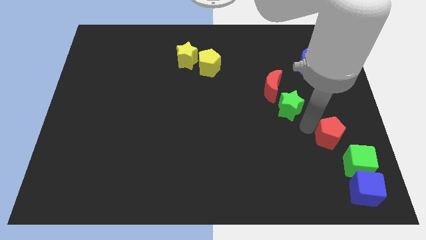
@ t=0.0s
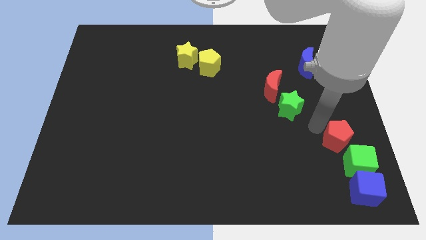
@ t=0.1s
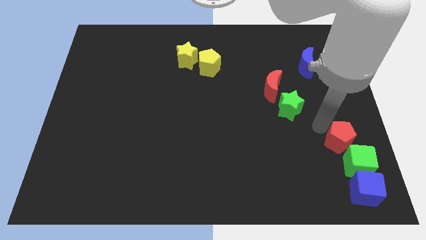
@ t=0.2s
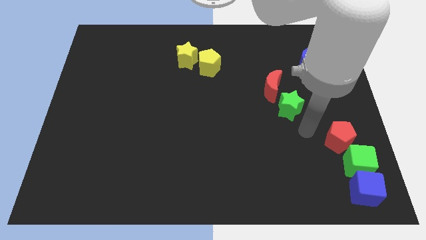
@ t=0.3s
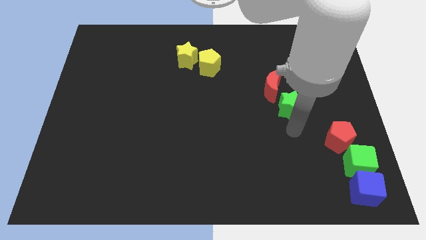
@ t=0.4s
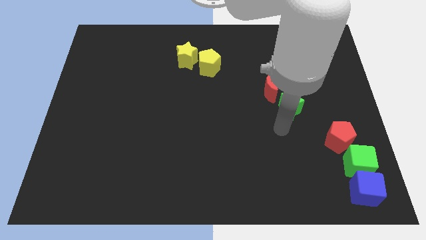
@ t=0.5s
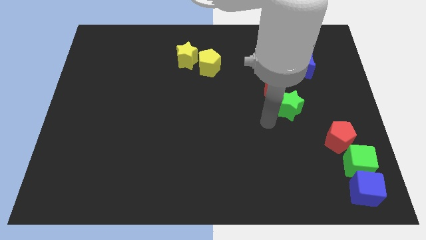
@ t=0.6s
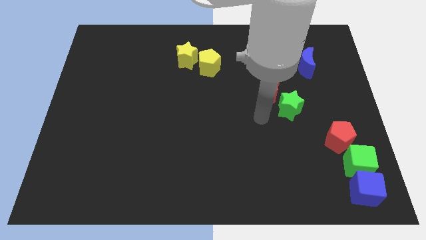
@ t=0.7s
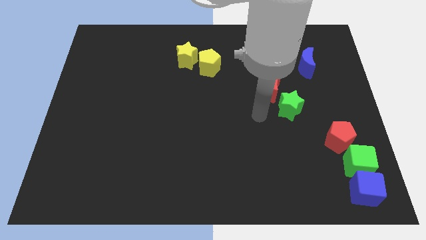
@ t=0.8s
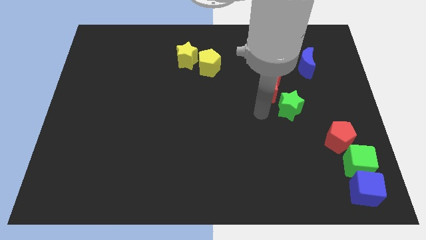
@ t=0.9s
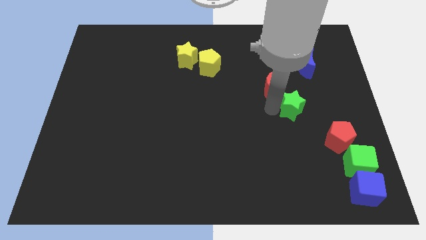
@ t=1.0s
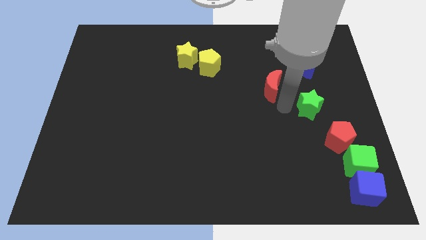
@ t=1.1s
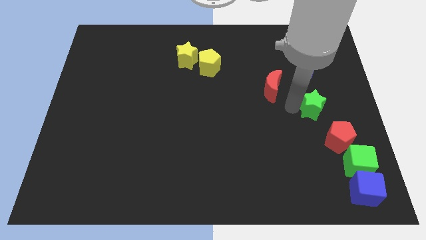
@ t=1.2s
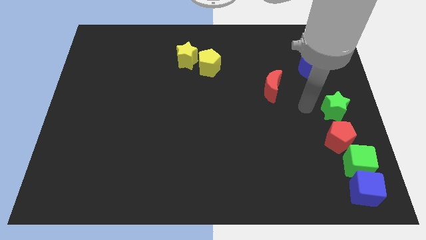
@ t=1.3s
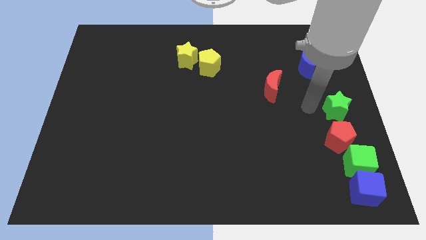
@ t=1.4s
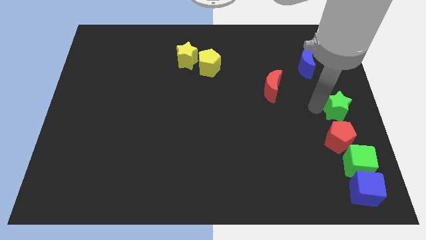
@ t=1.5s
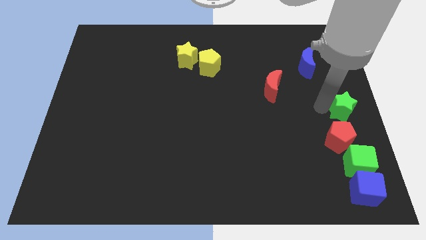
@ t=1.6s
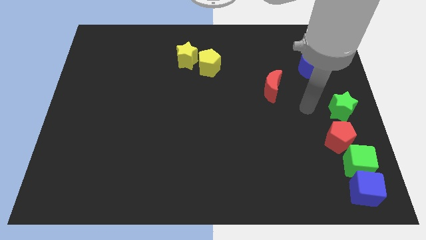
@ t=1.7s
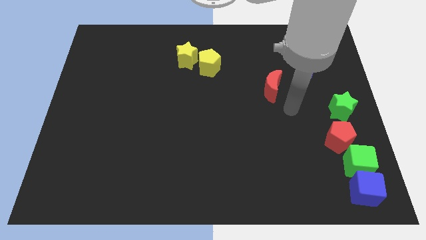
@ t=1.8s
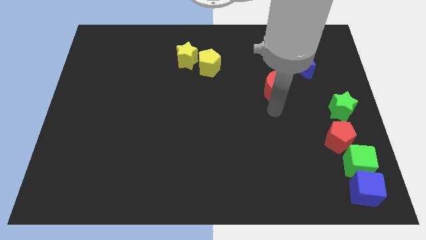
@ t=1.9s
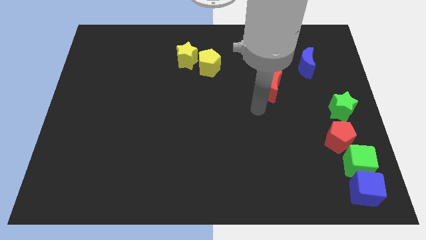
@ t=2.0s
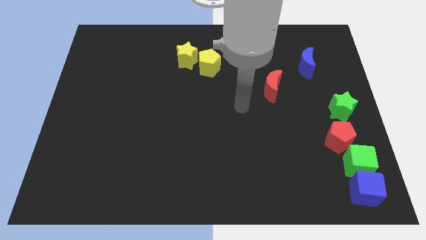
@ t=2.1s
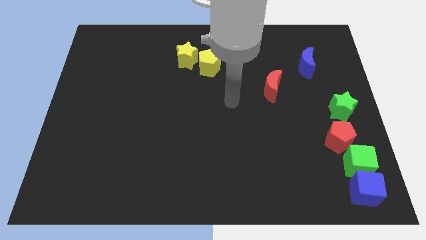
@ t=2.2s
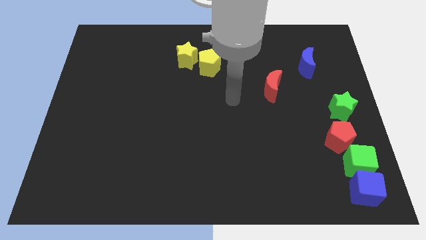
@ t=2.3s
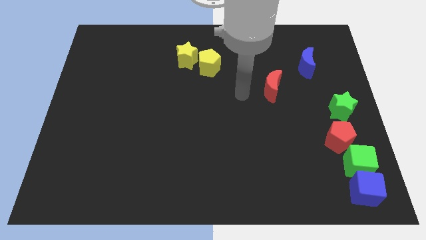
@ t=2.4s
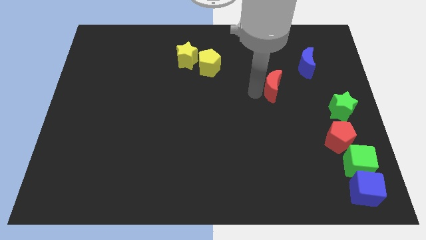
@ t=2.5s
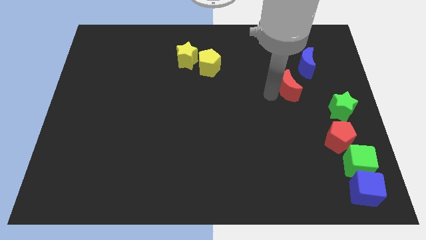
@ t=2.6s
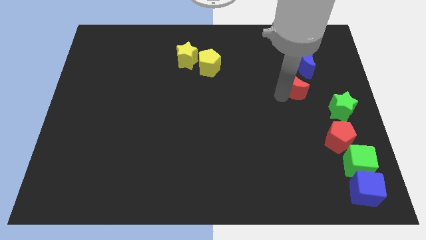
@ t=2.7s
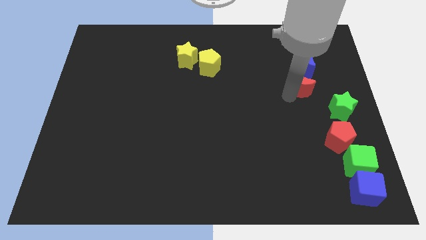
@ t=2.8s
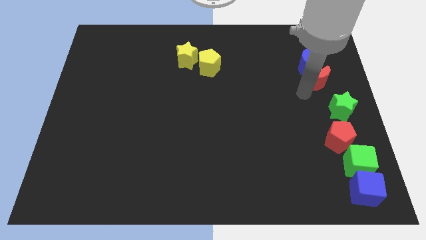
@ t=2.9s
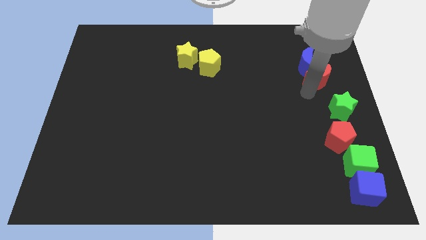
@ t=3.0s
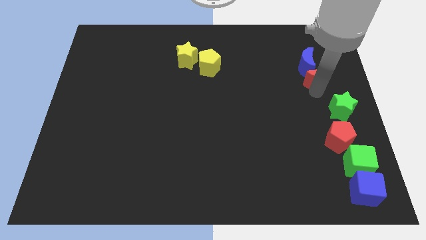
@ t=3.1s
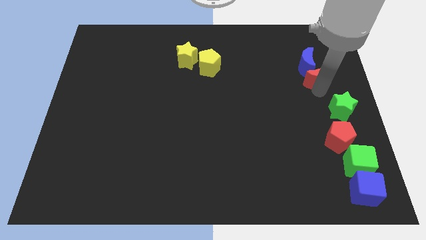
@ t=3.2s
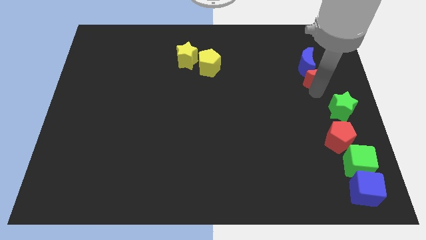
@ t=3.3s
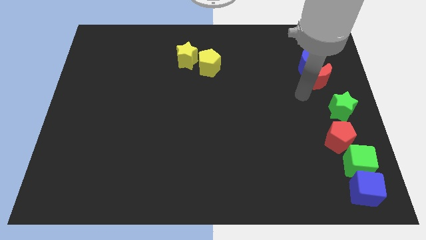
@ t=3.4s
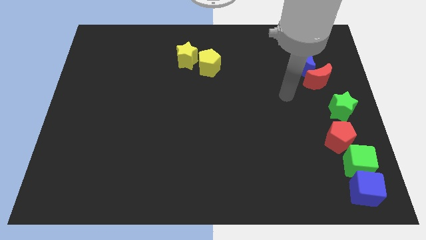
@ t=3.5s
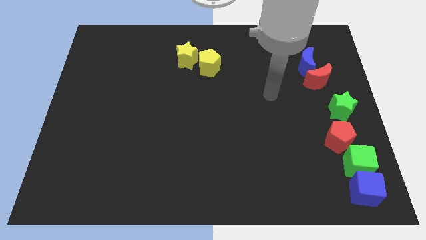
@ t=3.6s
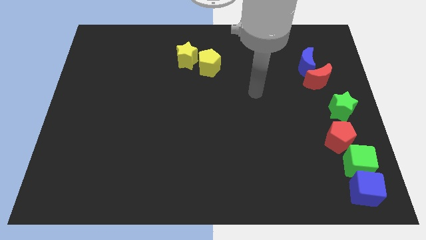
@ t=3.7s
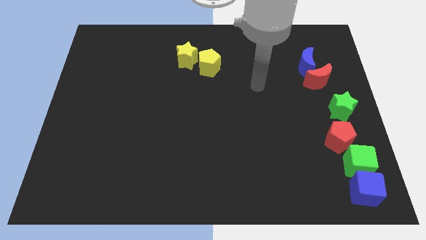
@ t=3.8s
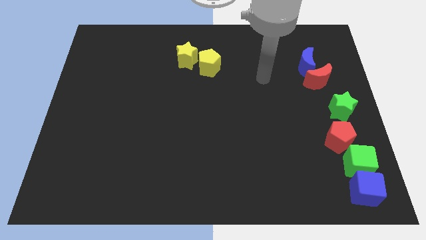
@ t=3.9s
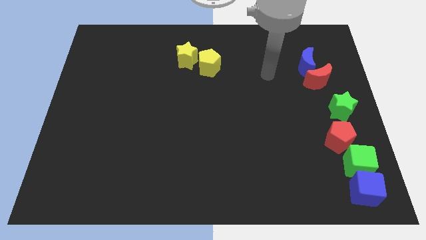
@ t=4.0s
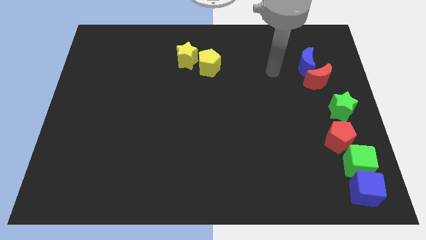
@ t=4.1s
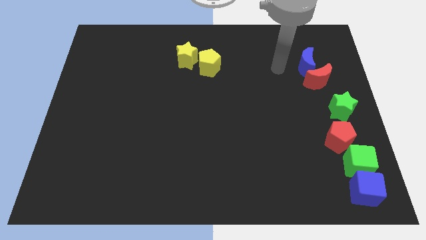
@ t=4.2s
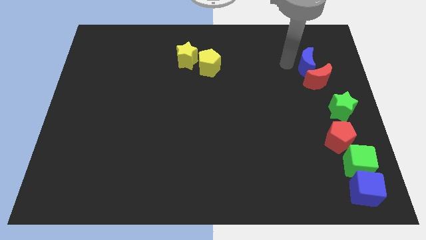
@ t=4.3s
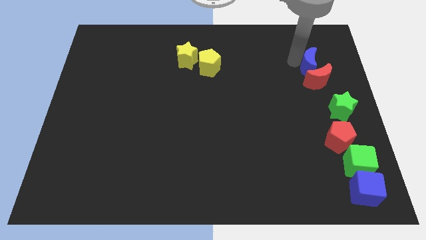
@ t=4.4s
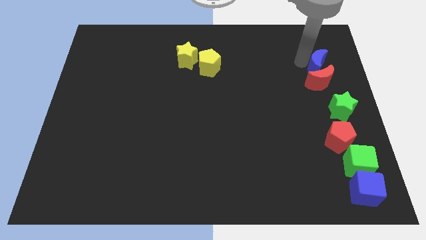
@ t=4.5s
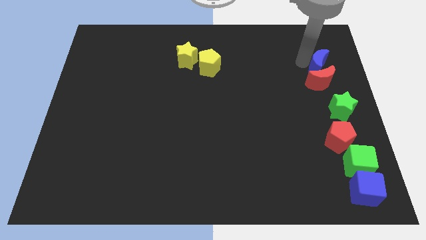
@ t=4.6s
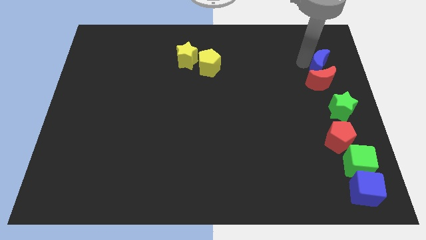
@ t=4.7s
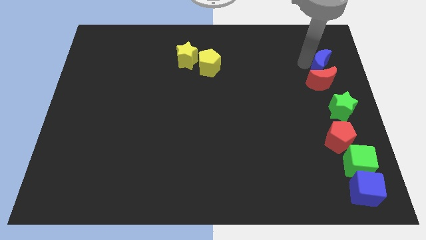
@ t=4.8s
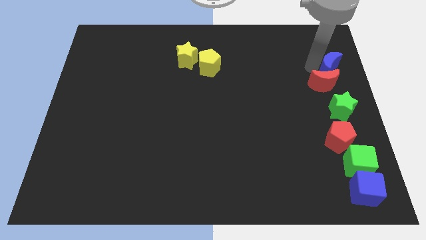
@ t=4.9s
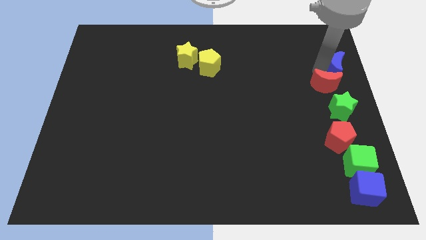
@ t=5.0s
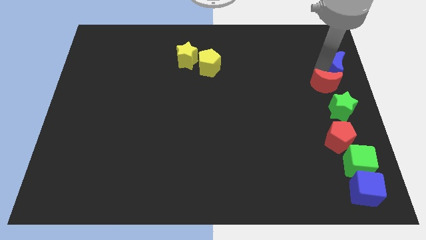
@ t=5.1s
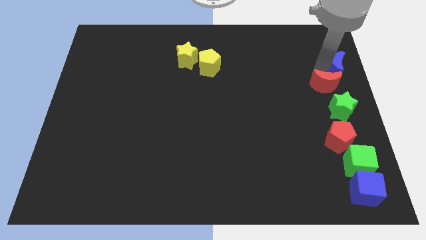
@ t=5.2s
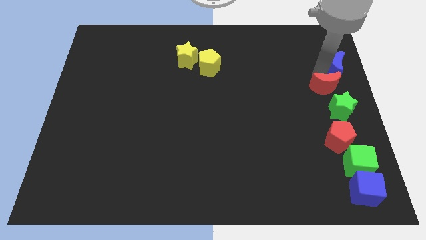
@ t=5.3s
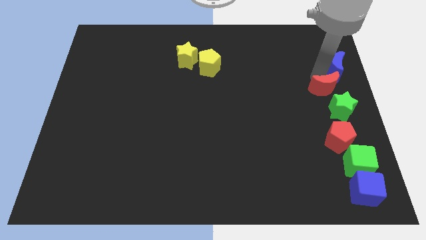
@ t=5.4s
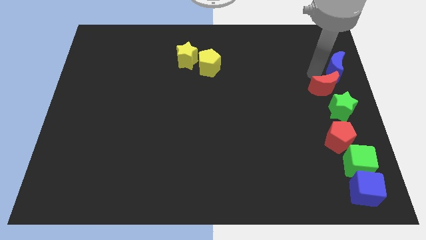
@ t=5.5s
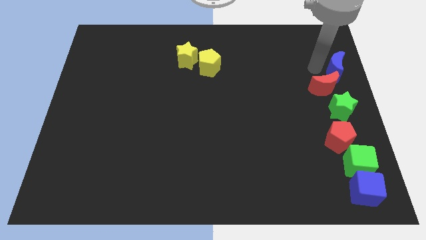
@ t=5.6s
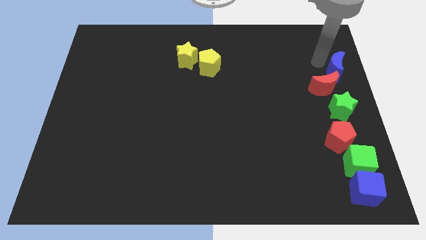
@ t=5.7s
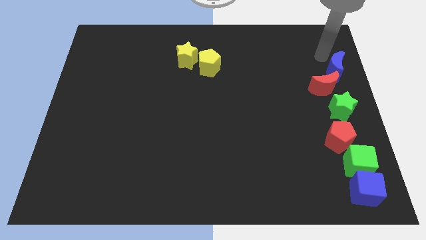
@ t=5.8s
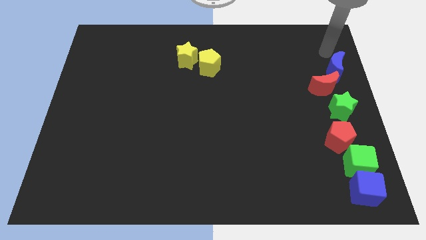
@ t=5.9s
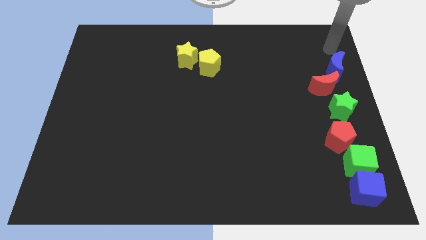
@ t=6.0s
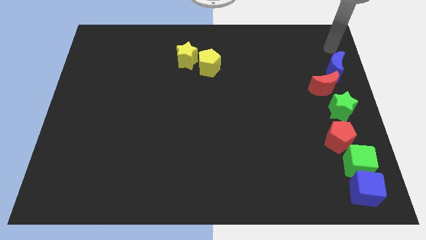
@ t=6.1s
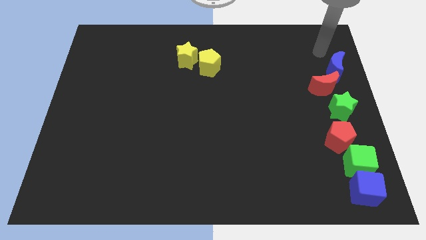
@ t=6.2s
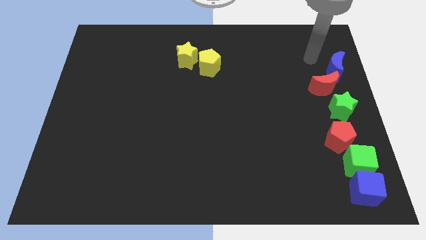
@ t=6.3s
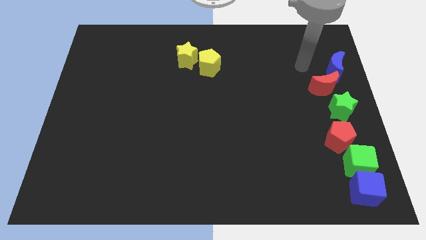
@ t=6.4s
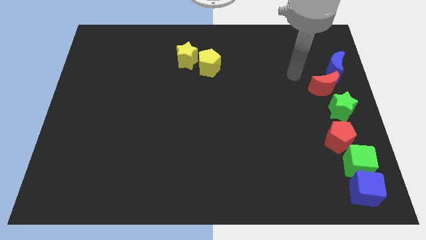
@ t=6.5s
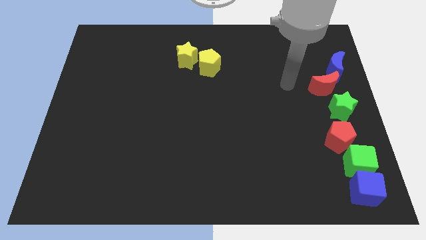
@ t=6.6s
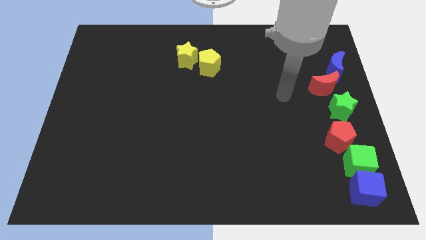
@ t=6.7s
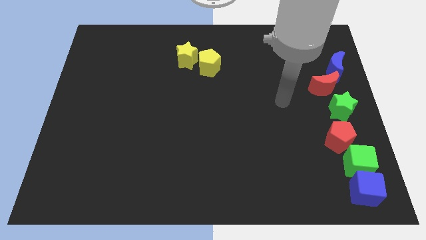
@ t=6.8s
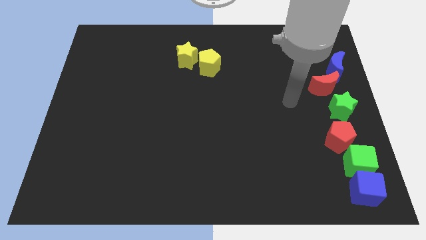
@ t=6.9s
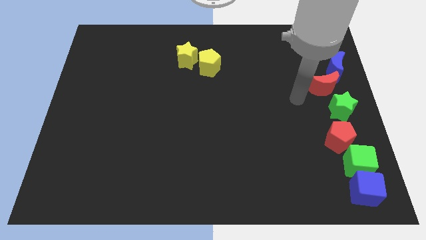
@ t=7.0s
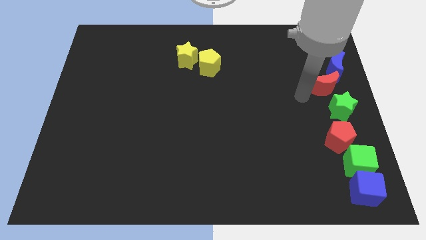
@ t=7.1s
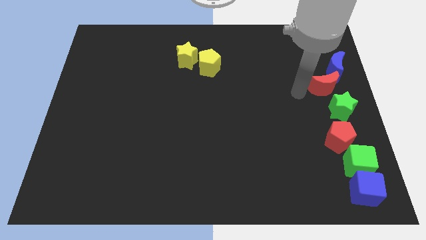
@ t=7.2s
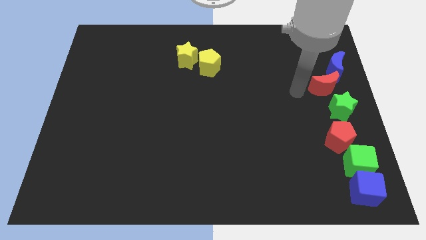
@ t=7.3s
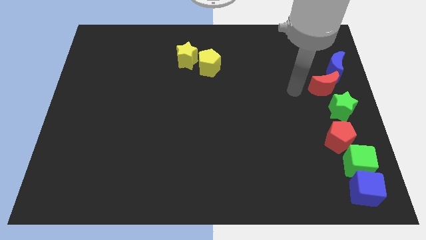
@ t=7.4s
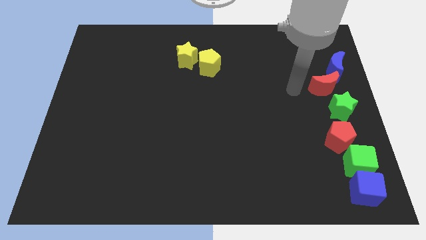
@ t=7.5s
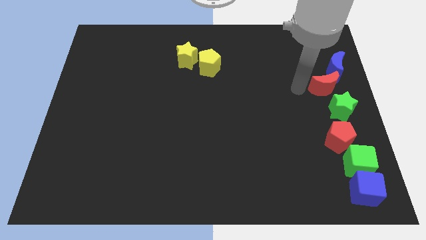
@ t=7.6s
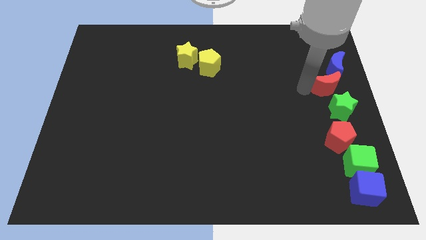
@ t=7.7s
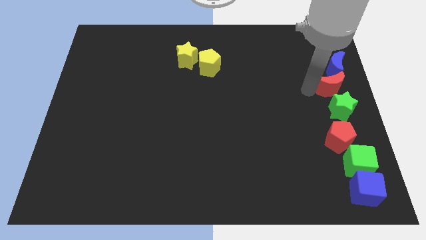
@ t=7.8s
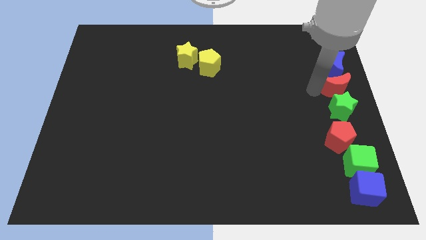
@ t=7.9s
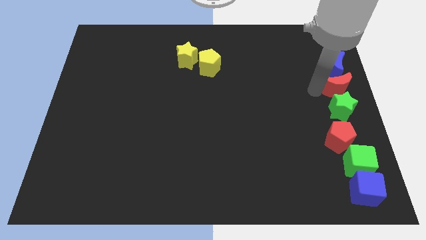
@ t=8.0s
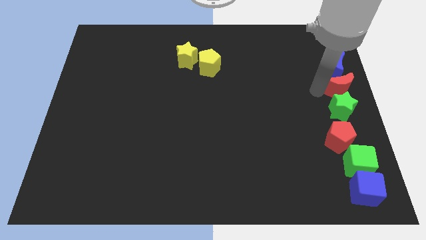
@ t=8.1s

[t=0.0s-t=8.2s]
push the red pentagon green star red moon and blue moon together to form a straight line

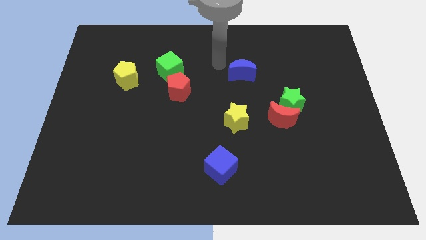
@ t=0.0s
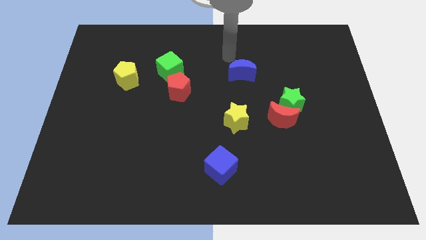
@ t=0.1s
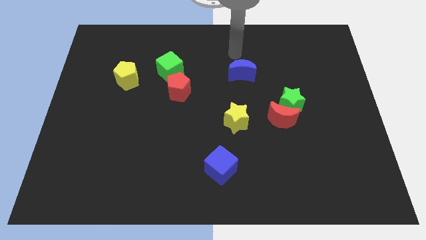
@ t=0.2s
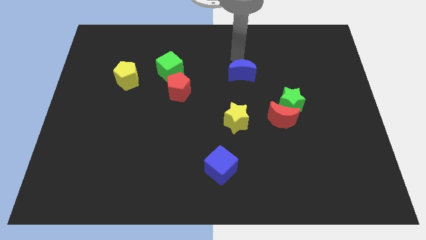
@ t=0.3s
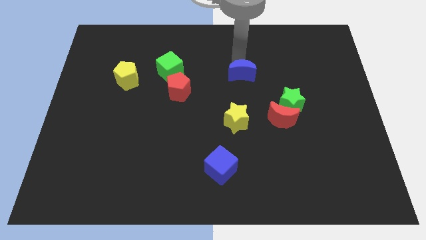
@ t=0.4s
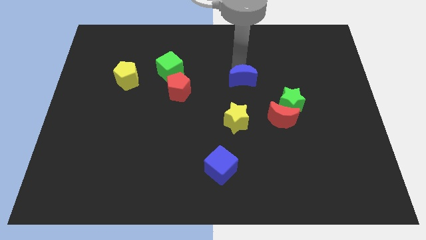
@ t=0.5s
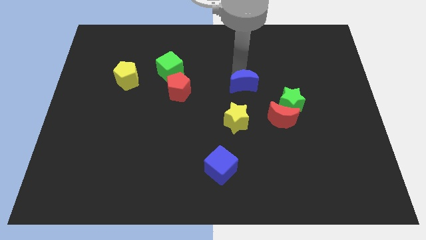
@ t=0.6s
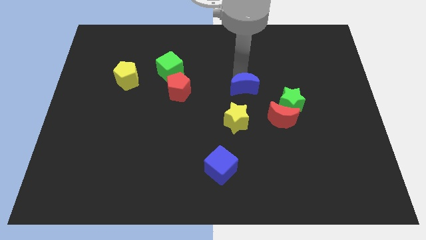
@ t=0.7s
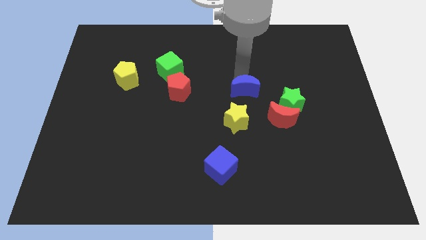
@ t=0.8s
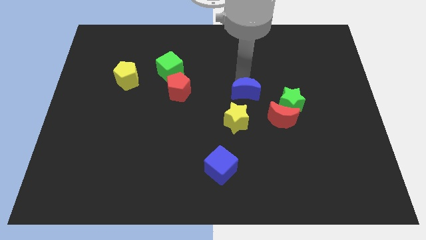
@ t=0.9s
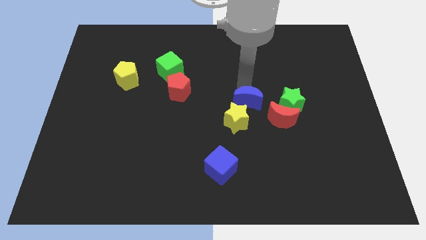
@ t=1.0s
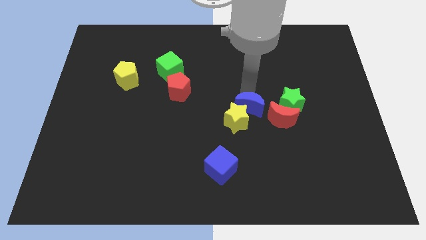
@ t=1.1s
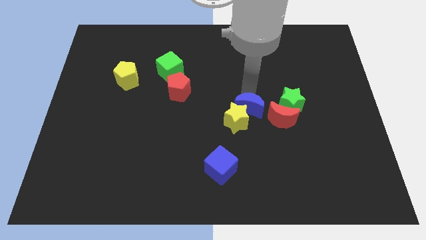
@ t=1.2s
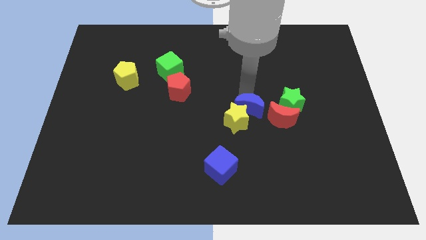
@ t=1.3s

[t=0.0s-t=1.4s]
push the blue moon downwards
